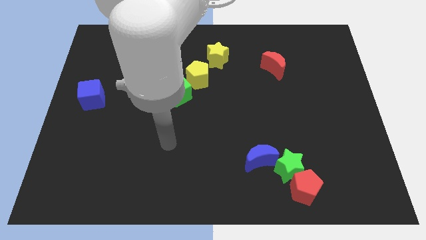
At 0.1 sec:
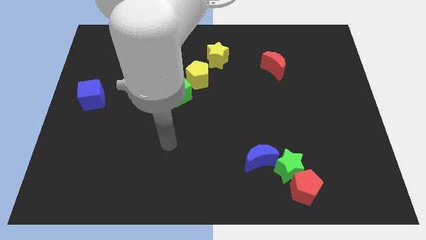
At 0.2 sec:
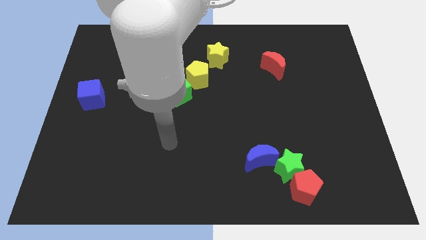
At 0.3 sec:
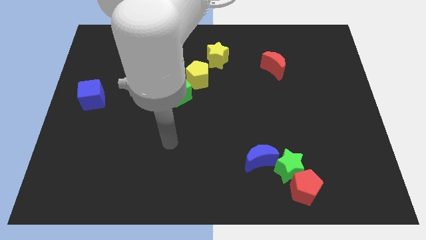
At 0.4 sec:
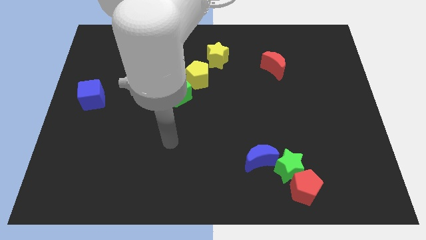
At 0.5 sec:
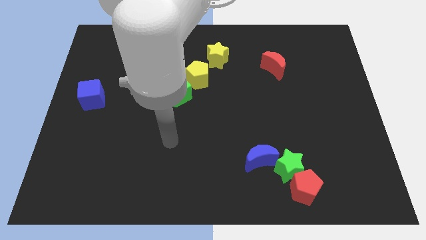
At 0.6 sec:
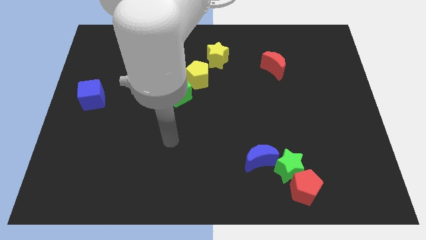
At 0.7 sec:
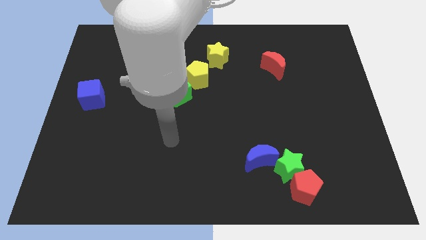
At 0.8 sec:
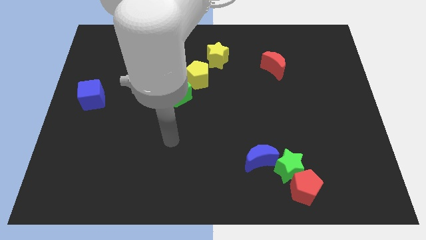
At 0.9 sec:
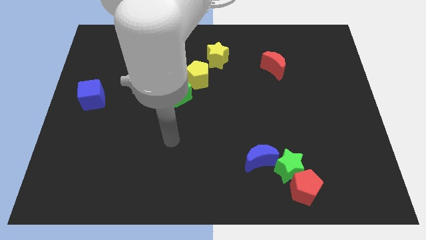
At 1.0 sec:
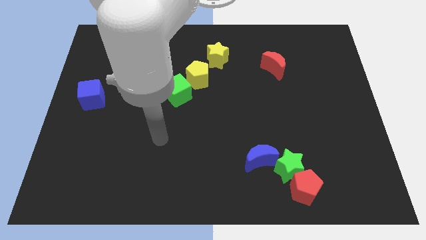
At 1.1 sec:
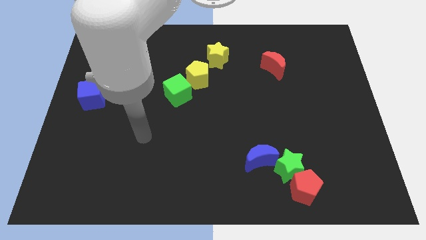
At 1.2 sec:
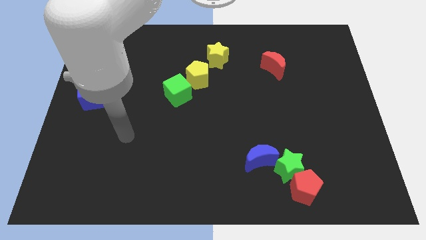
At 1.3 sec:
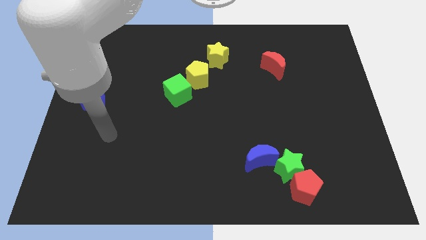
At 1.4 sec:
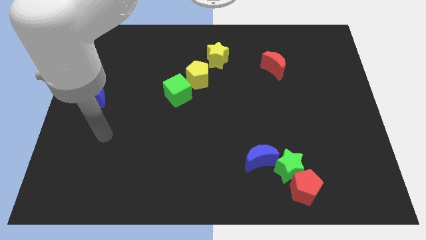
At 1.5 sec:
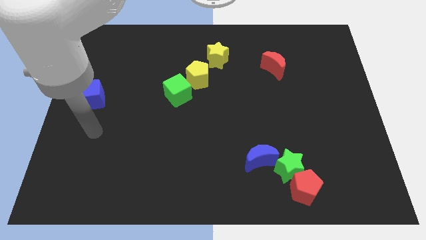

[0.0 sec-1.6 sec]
move your arm below to the blue cube

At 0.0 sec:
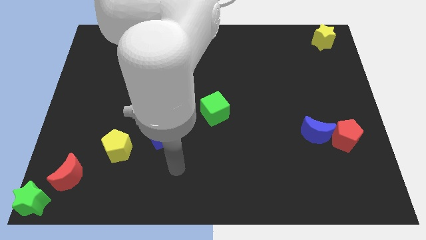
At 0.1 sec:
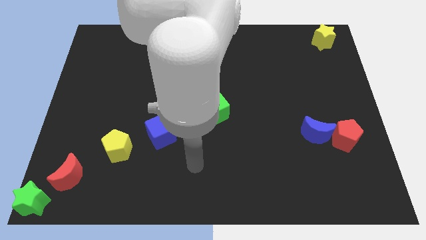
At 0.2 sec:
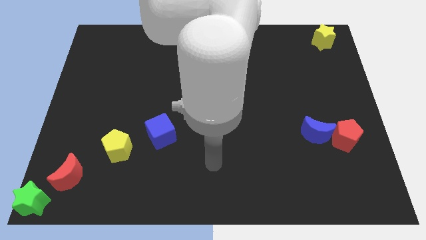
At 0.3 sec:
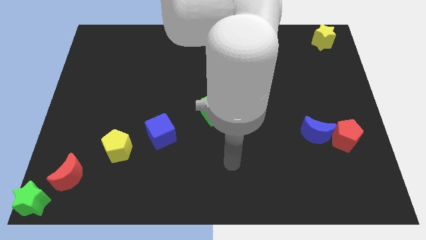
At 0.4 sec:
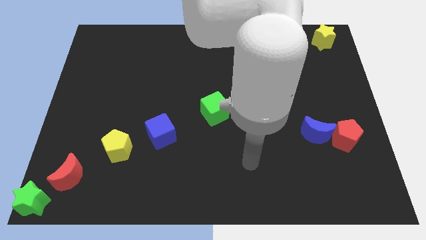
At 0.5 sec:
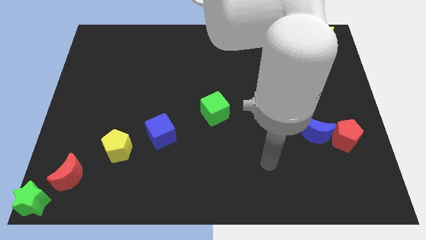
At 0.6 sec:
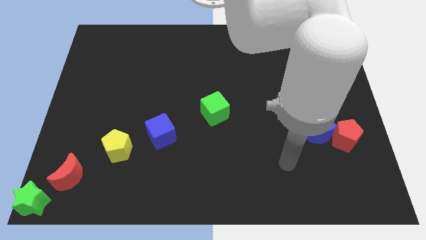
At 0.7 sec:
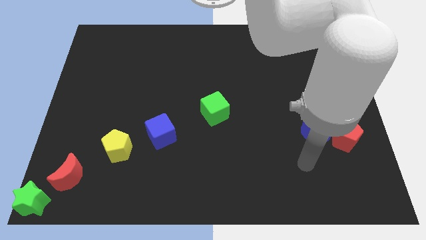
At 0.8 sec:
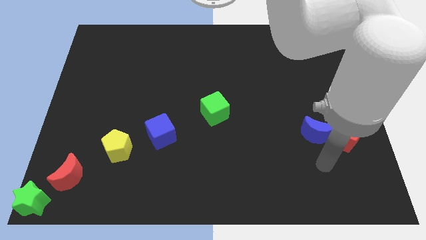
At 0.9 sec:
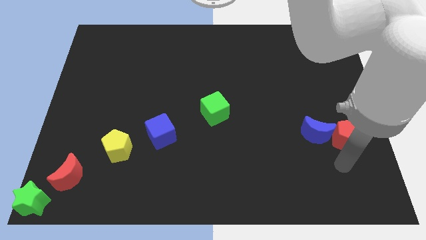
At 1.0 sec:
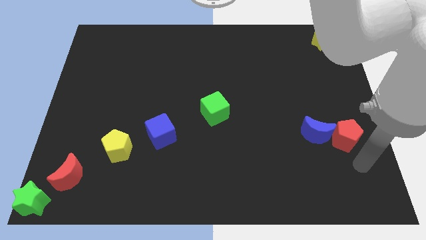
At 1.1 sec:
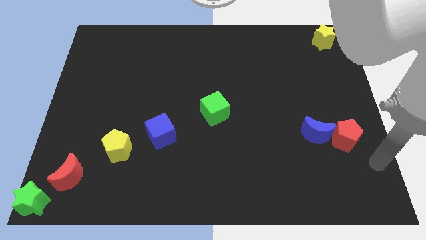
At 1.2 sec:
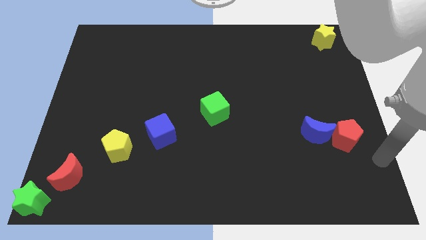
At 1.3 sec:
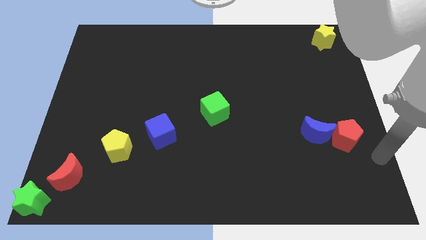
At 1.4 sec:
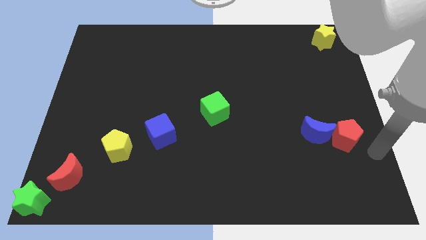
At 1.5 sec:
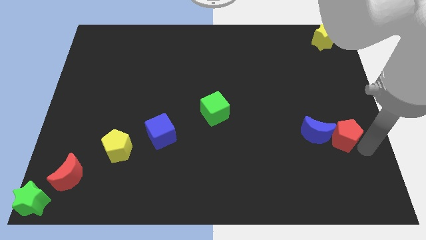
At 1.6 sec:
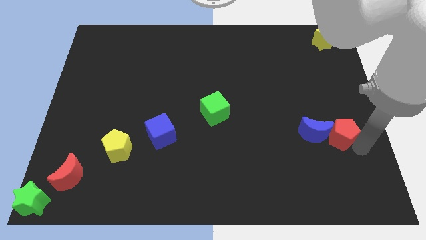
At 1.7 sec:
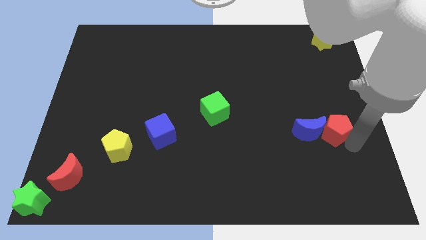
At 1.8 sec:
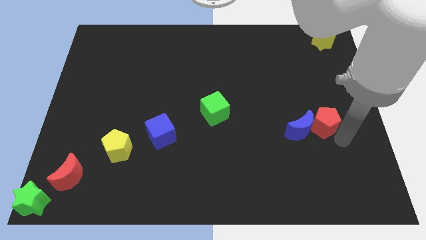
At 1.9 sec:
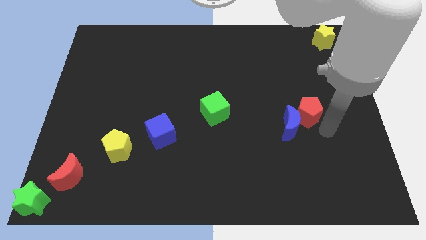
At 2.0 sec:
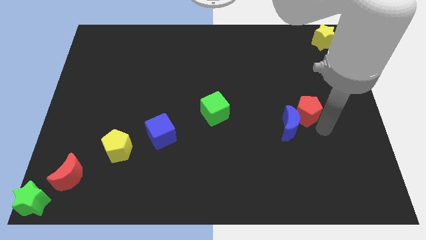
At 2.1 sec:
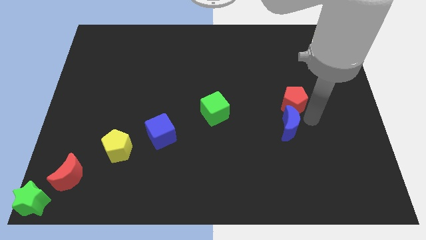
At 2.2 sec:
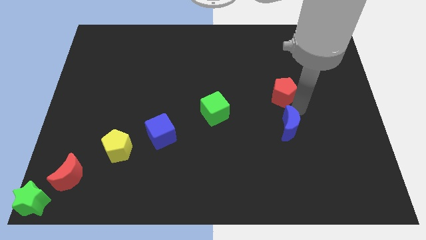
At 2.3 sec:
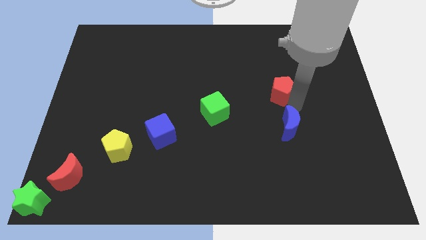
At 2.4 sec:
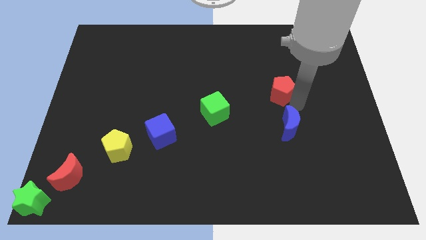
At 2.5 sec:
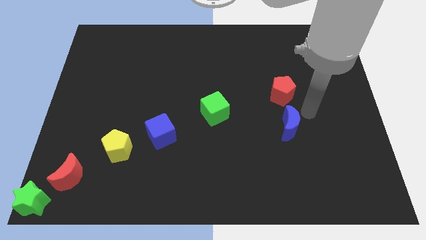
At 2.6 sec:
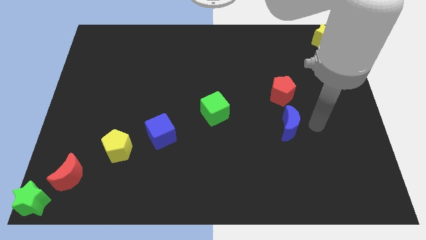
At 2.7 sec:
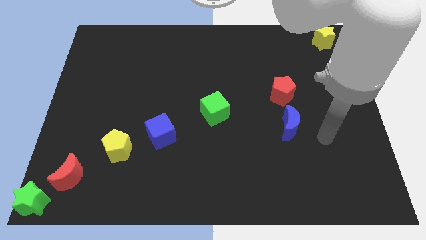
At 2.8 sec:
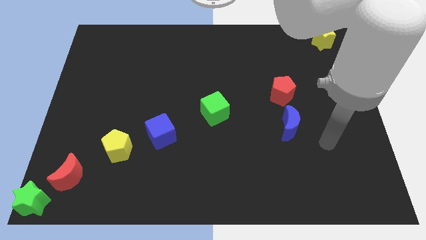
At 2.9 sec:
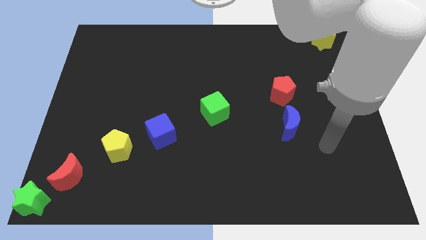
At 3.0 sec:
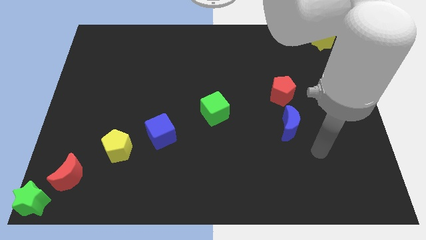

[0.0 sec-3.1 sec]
put red pentagon on top of blue moon

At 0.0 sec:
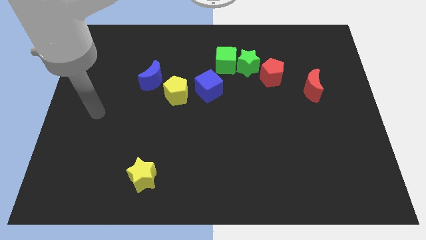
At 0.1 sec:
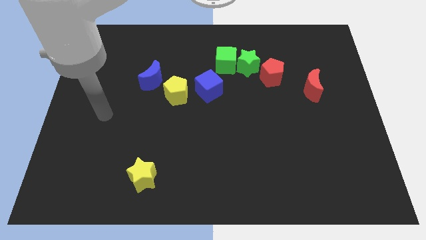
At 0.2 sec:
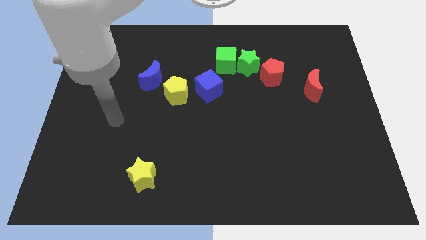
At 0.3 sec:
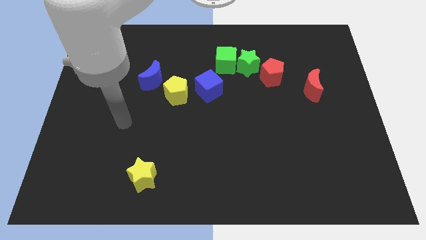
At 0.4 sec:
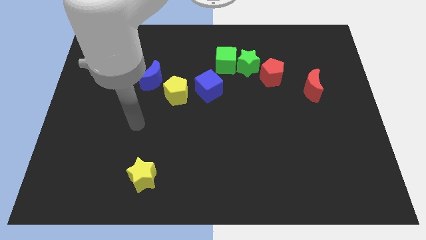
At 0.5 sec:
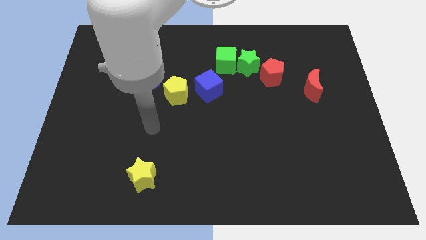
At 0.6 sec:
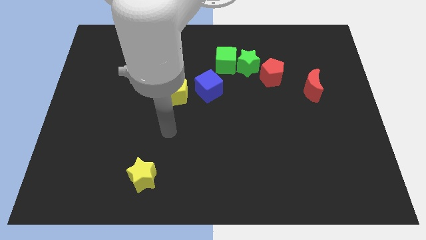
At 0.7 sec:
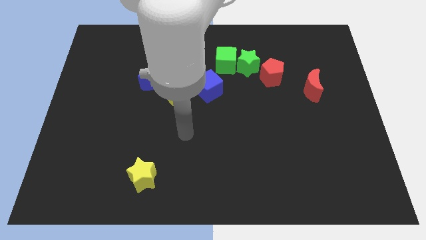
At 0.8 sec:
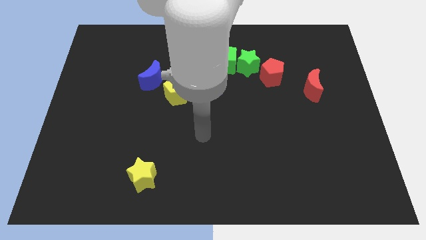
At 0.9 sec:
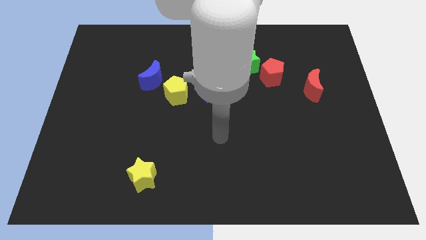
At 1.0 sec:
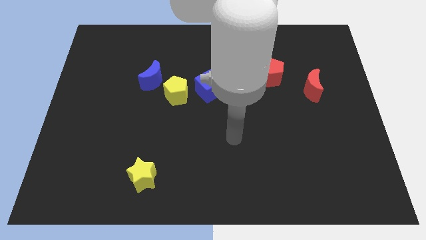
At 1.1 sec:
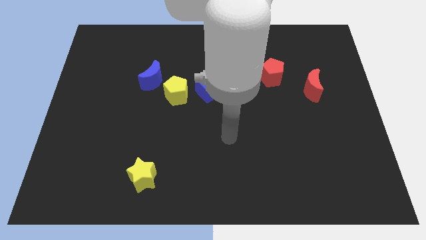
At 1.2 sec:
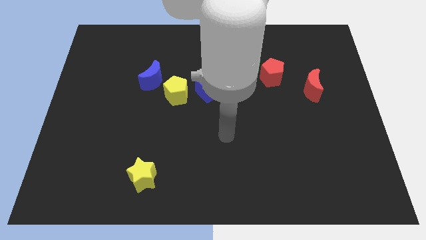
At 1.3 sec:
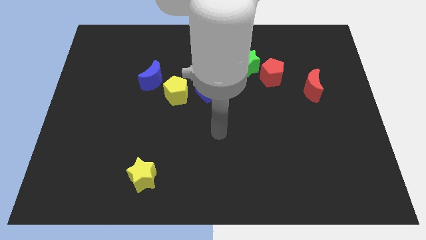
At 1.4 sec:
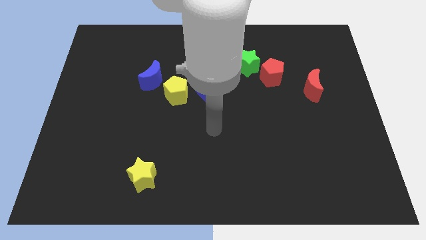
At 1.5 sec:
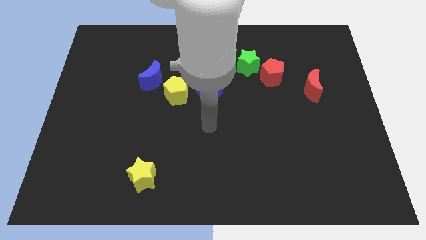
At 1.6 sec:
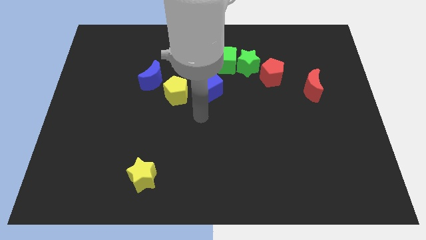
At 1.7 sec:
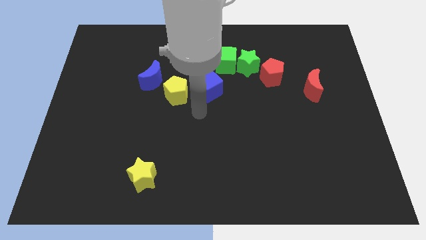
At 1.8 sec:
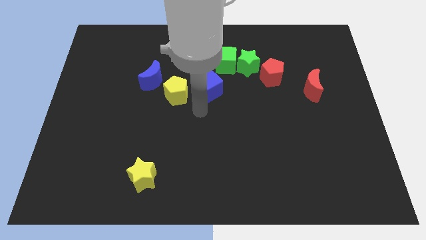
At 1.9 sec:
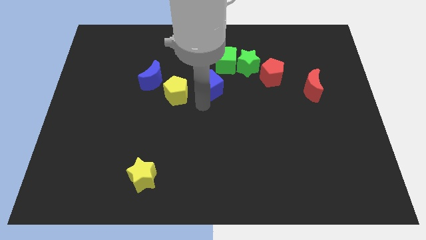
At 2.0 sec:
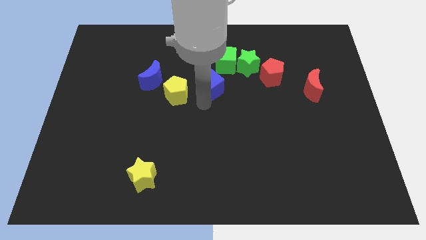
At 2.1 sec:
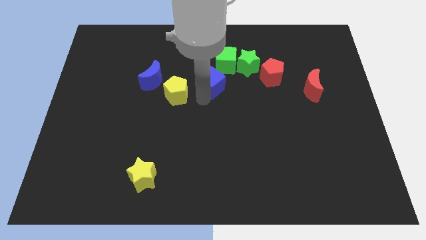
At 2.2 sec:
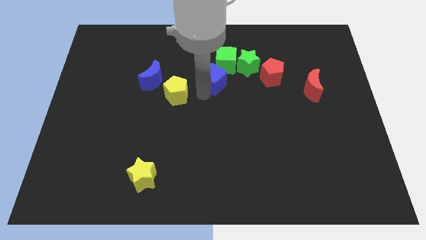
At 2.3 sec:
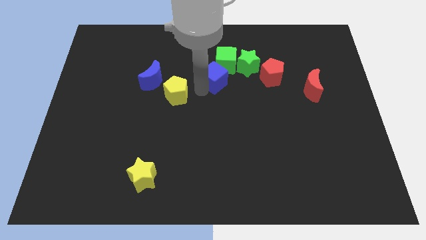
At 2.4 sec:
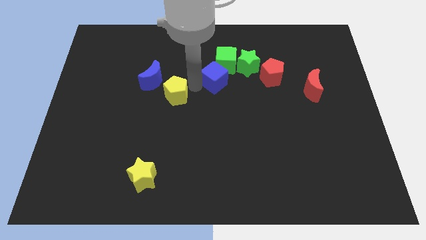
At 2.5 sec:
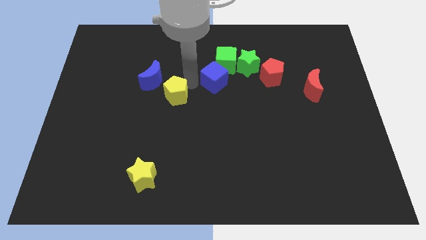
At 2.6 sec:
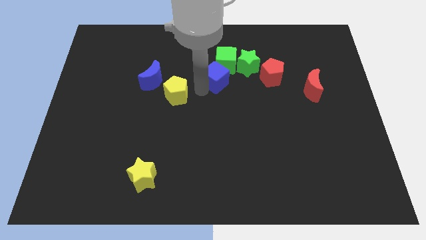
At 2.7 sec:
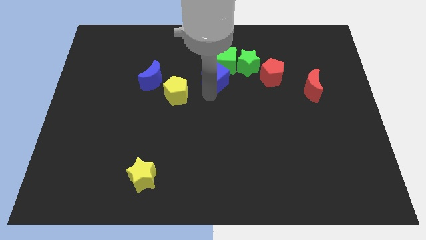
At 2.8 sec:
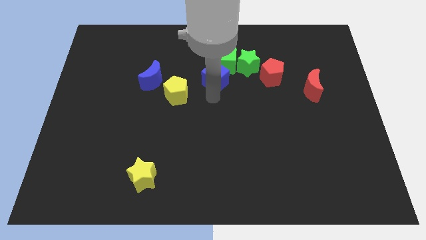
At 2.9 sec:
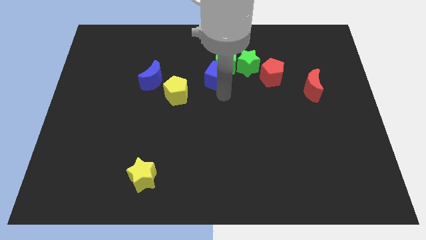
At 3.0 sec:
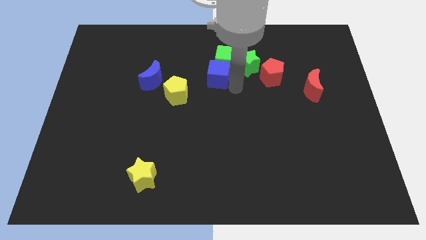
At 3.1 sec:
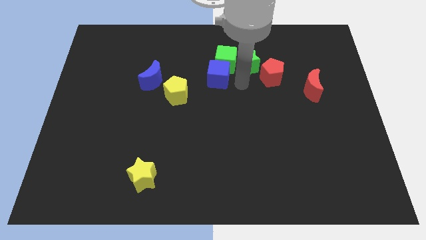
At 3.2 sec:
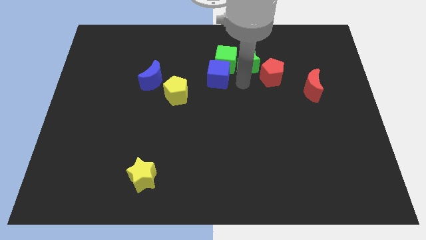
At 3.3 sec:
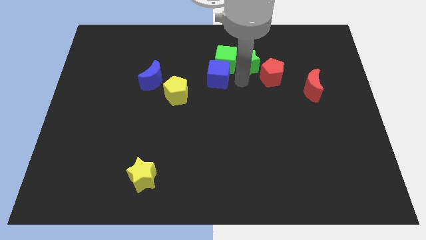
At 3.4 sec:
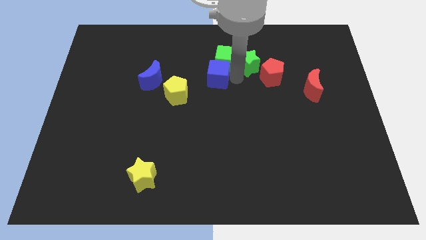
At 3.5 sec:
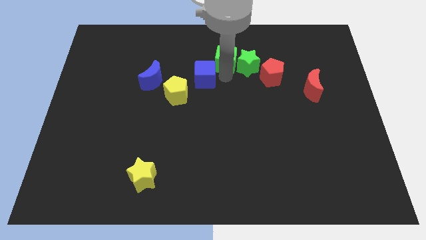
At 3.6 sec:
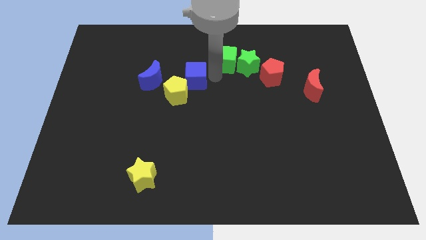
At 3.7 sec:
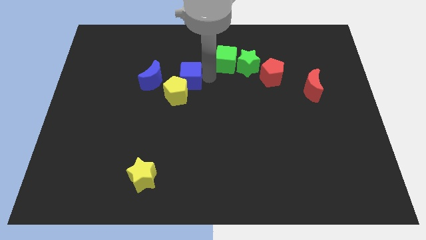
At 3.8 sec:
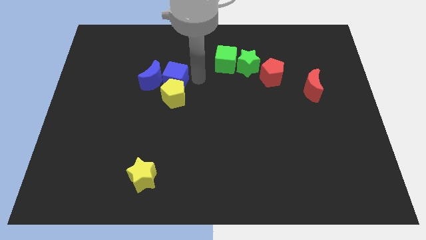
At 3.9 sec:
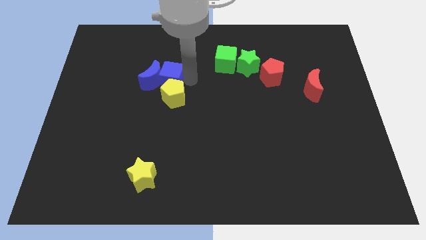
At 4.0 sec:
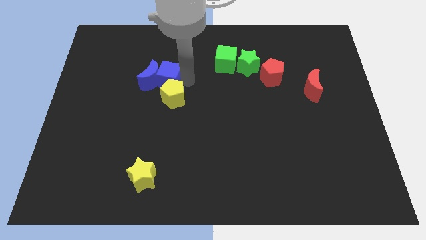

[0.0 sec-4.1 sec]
push blue cube into blue moon

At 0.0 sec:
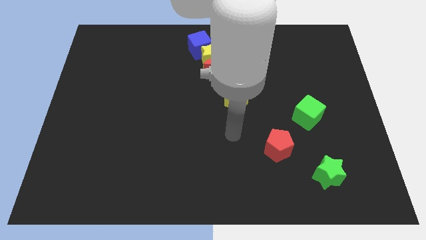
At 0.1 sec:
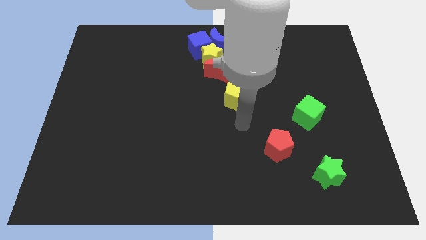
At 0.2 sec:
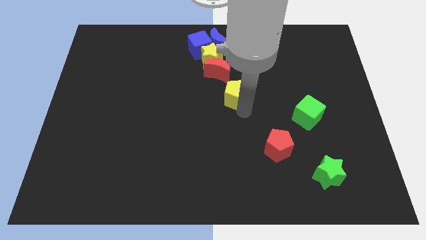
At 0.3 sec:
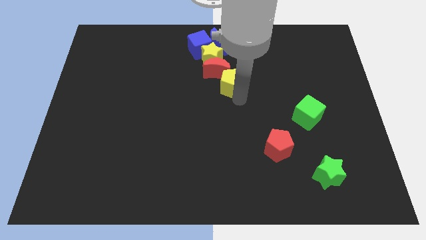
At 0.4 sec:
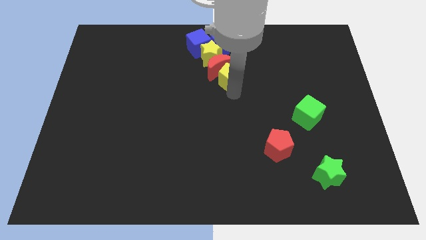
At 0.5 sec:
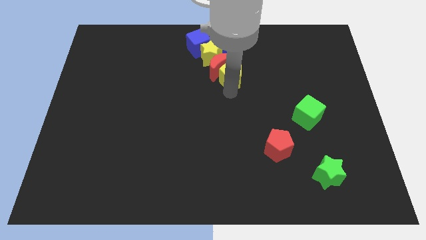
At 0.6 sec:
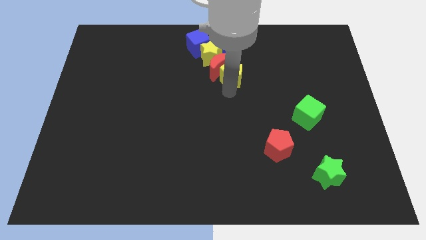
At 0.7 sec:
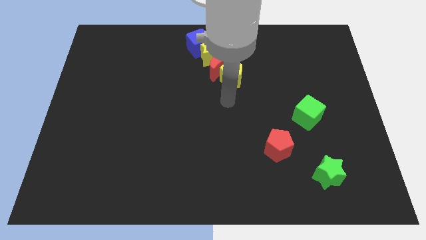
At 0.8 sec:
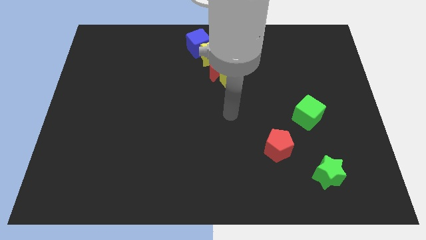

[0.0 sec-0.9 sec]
move yellow pentagon below the red crescent
